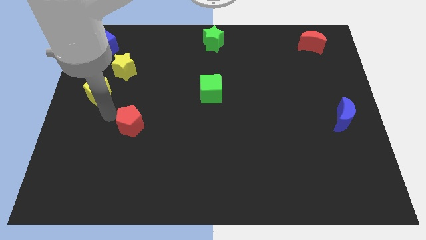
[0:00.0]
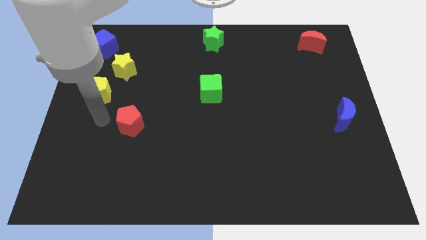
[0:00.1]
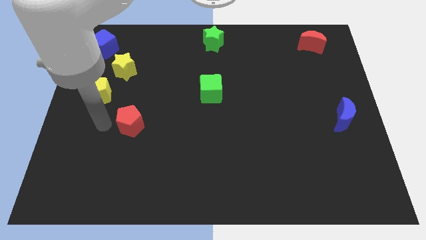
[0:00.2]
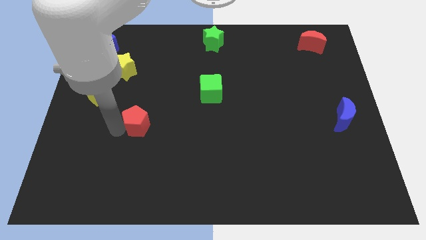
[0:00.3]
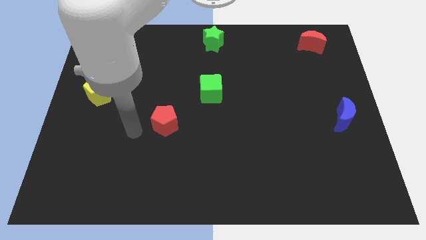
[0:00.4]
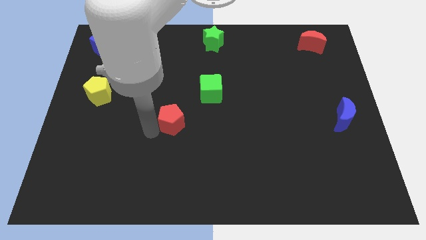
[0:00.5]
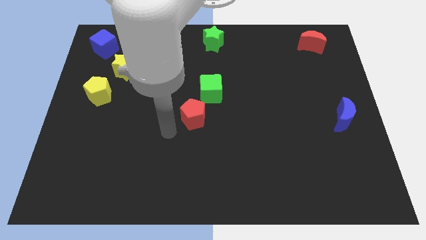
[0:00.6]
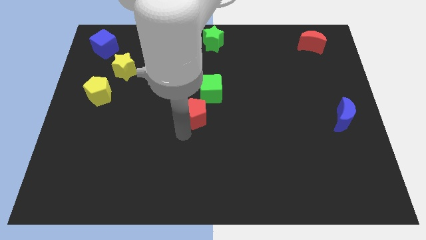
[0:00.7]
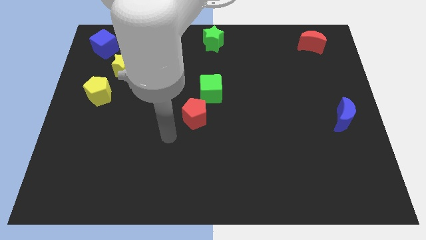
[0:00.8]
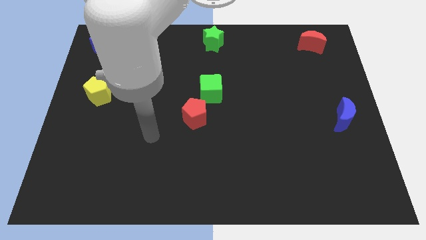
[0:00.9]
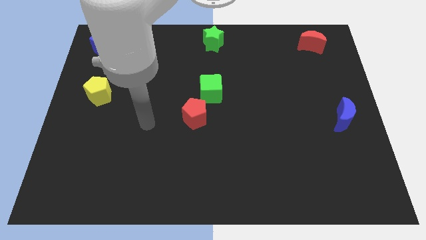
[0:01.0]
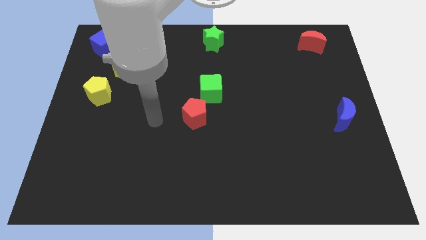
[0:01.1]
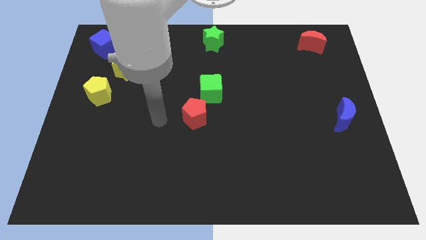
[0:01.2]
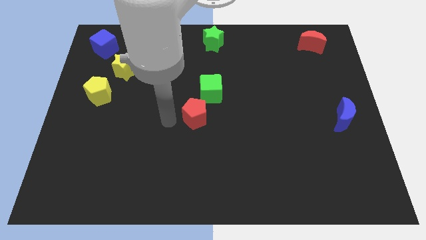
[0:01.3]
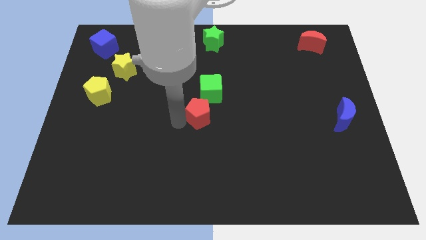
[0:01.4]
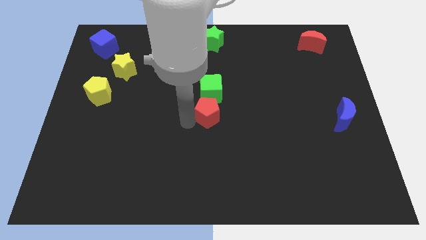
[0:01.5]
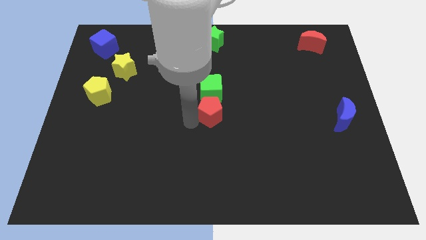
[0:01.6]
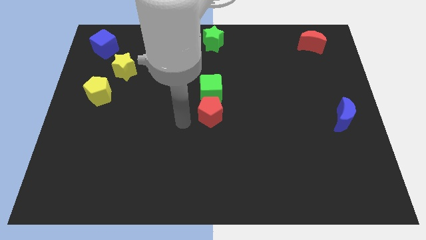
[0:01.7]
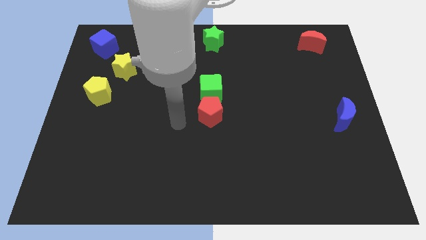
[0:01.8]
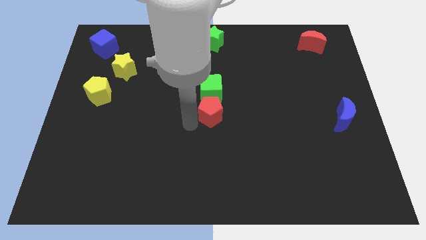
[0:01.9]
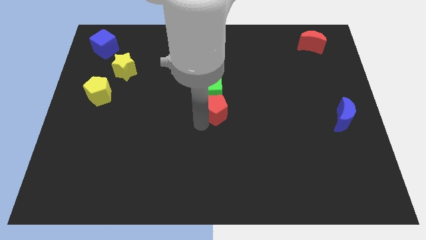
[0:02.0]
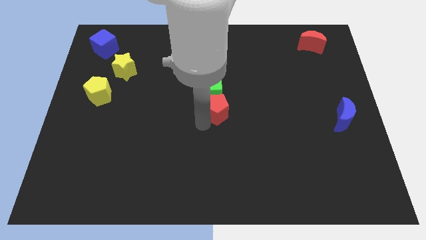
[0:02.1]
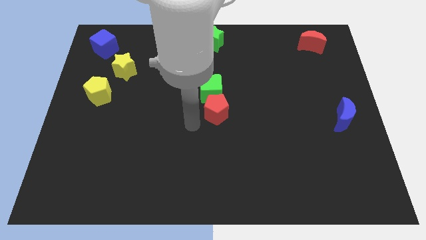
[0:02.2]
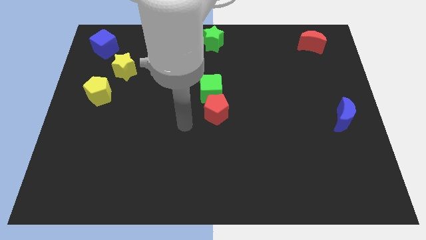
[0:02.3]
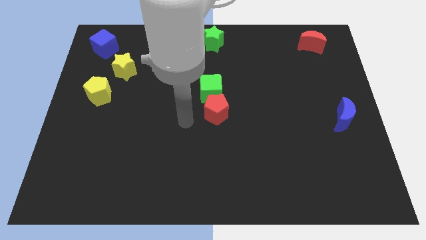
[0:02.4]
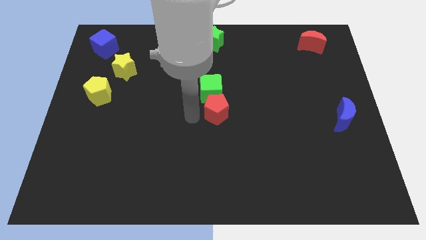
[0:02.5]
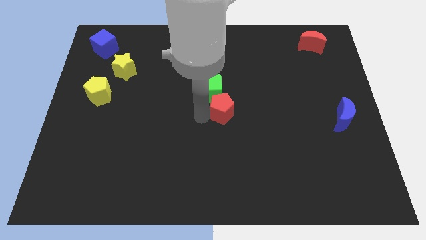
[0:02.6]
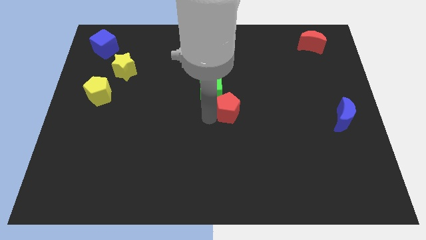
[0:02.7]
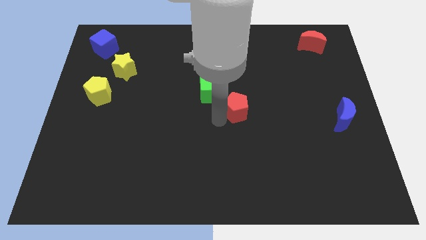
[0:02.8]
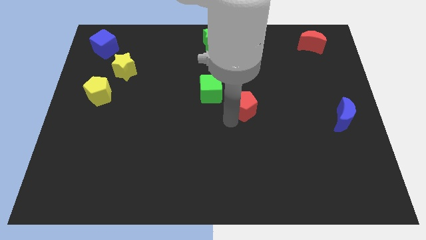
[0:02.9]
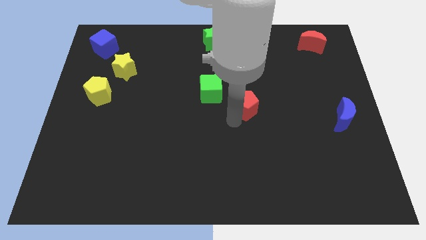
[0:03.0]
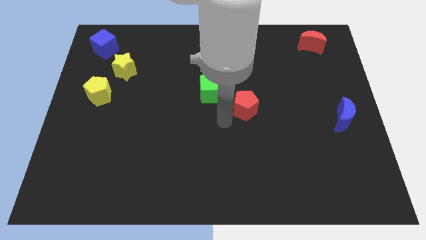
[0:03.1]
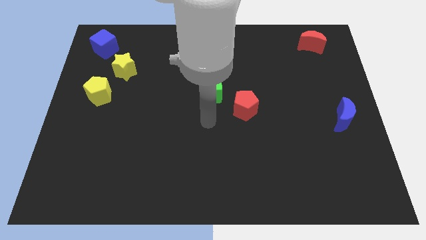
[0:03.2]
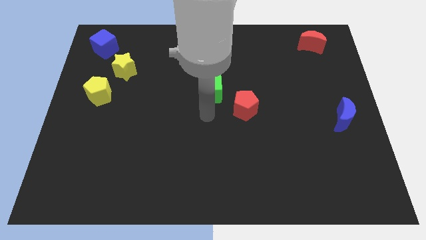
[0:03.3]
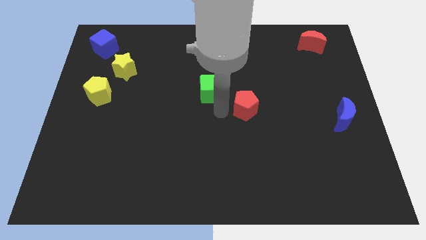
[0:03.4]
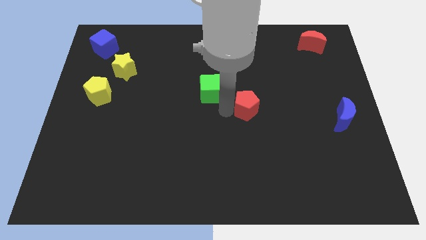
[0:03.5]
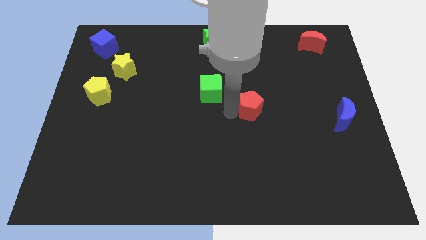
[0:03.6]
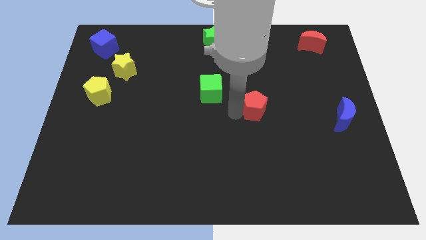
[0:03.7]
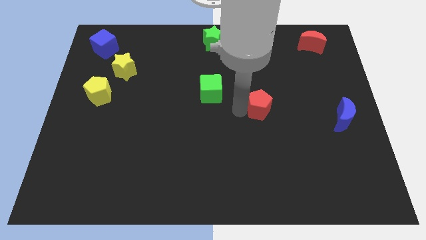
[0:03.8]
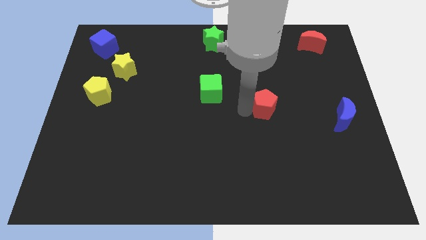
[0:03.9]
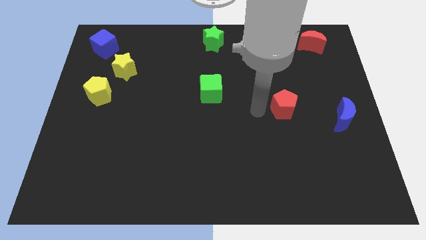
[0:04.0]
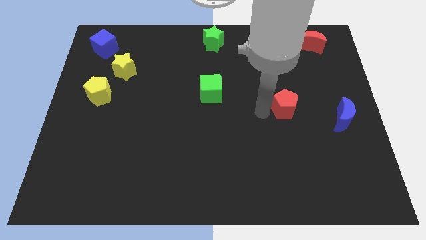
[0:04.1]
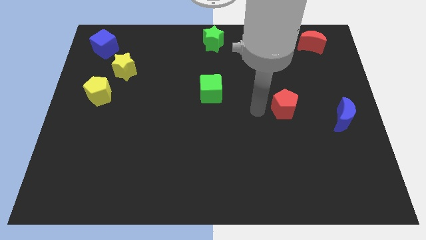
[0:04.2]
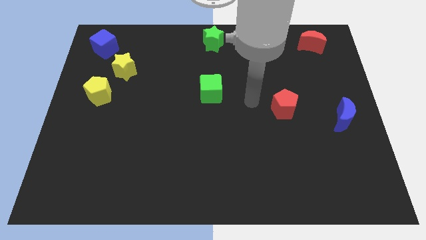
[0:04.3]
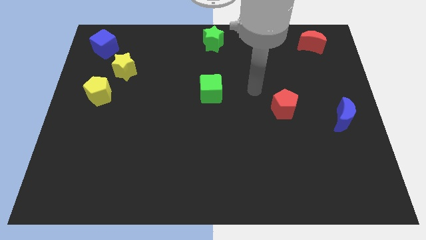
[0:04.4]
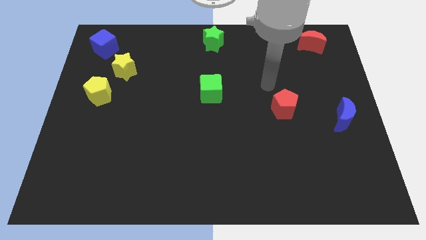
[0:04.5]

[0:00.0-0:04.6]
drag red pentagon towards middle right side of the board

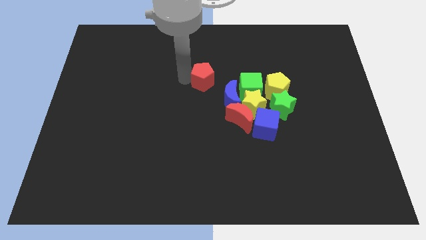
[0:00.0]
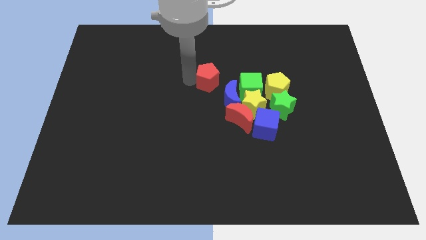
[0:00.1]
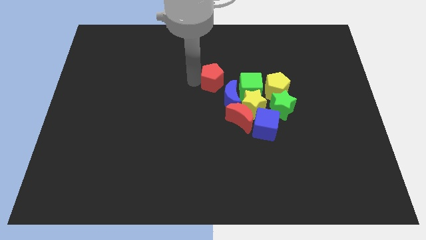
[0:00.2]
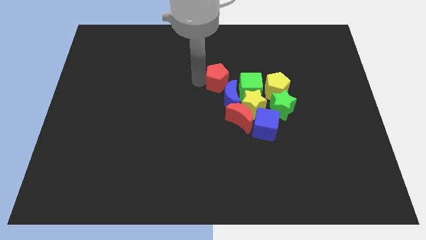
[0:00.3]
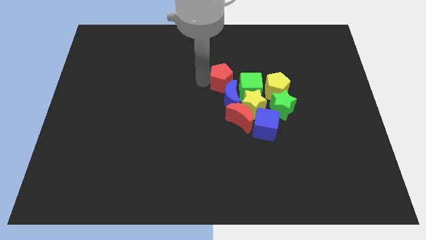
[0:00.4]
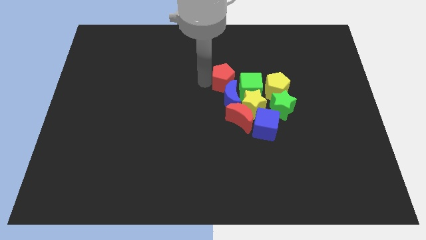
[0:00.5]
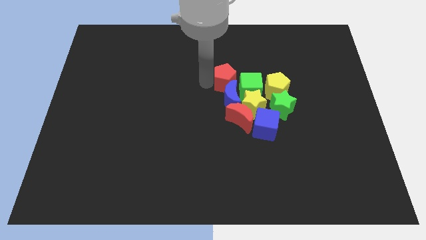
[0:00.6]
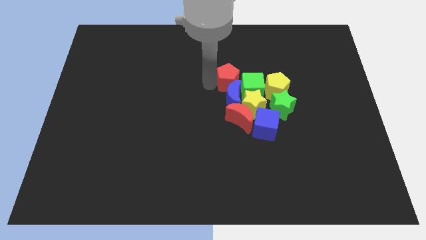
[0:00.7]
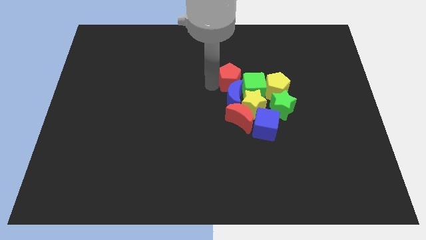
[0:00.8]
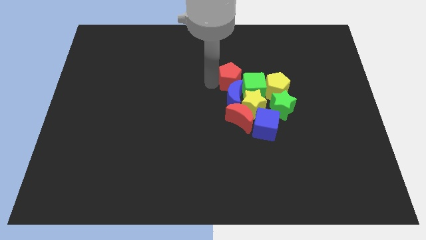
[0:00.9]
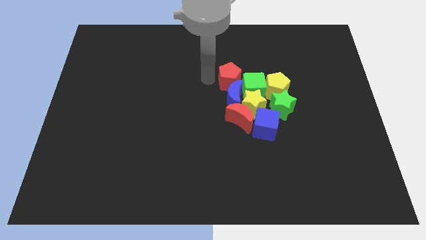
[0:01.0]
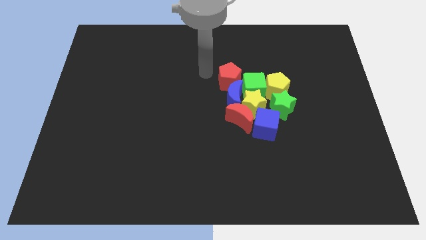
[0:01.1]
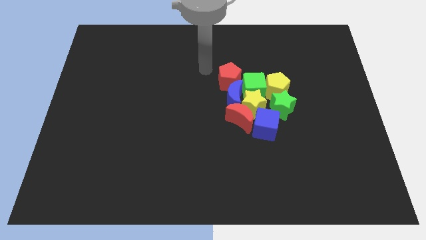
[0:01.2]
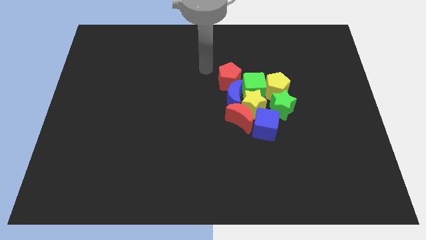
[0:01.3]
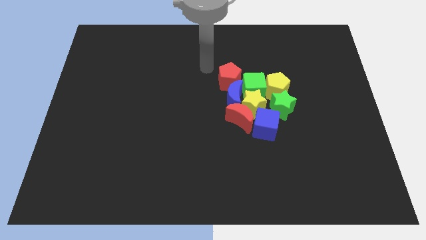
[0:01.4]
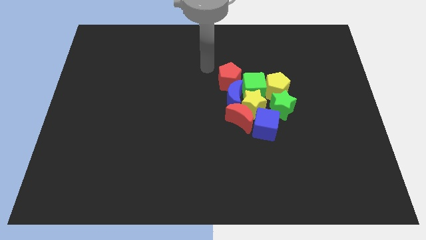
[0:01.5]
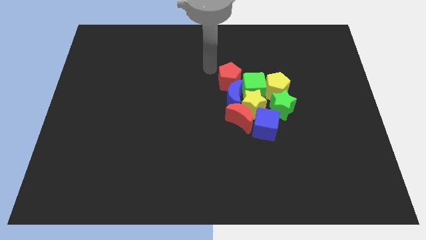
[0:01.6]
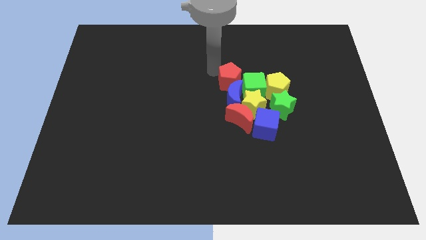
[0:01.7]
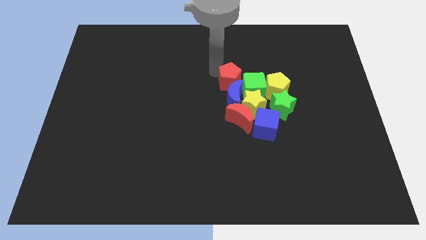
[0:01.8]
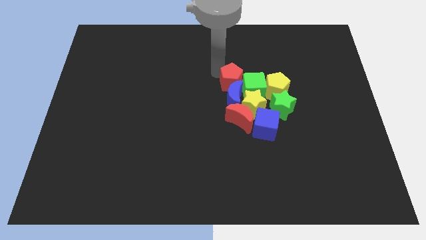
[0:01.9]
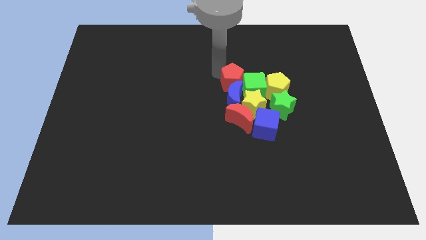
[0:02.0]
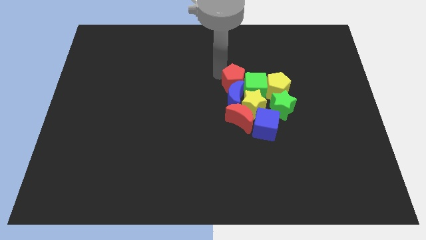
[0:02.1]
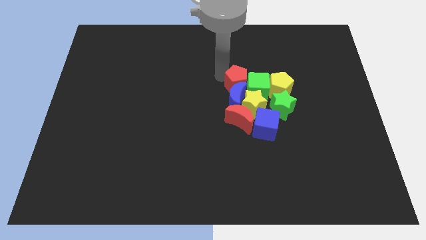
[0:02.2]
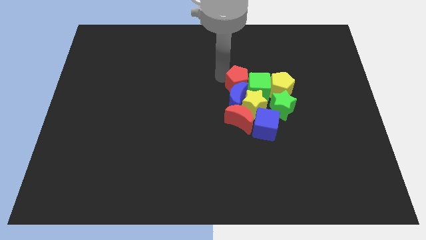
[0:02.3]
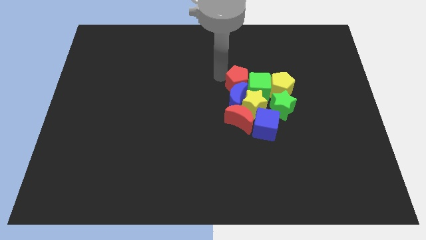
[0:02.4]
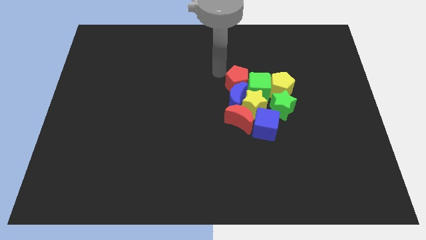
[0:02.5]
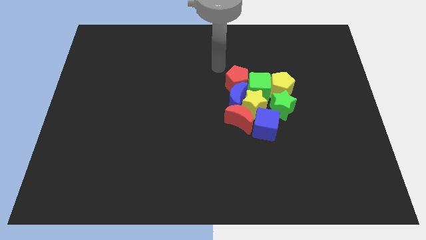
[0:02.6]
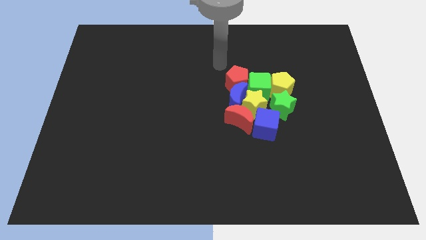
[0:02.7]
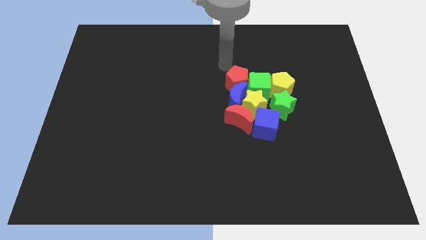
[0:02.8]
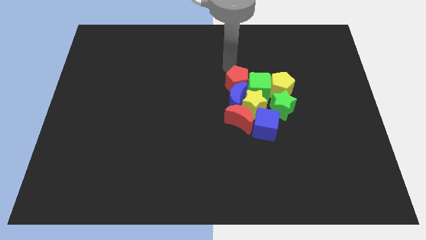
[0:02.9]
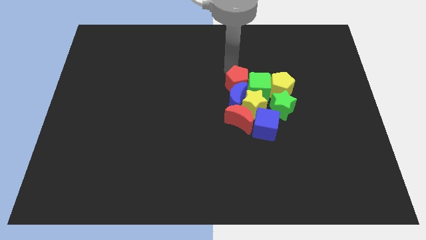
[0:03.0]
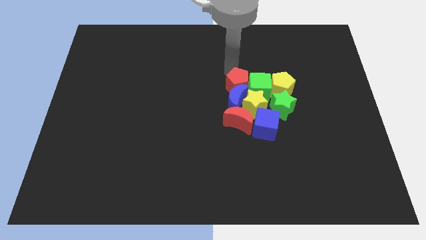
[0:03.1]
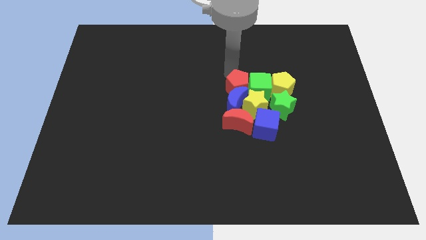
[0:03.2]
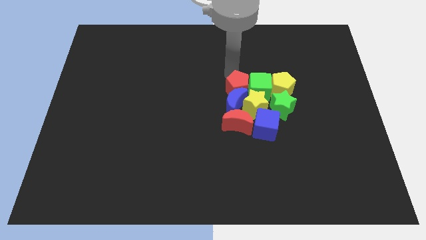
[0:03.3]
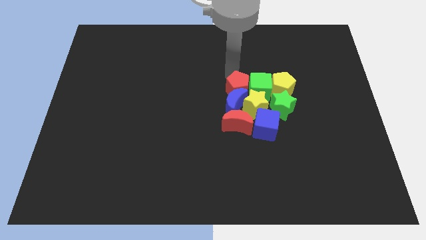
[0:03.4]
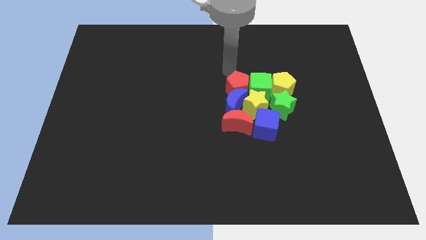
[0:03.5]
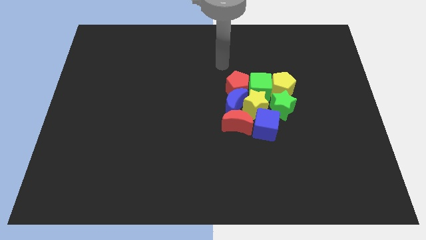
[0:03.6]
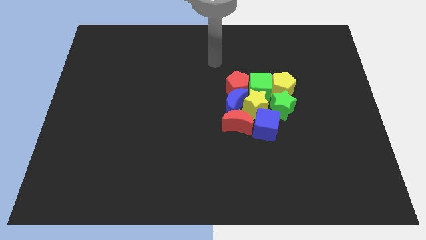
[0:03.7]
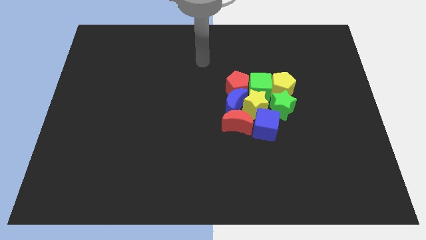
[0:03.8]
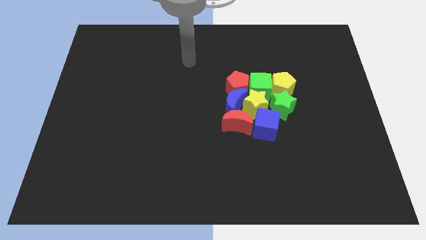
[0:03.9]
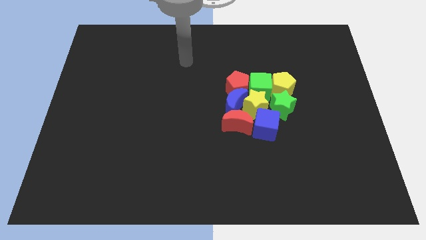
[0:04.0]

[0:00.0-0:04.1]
place the red pentagon left side of the green cube

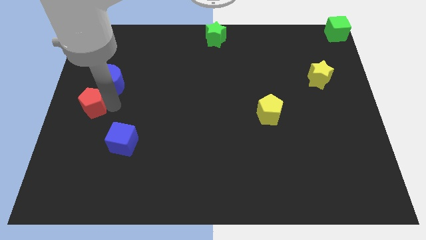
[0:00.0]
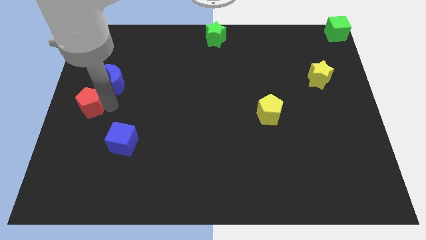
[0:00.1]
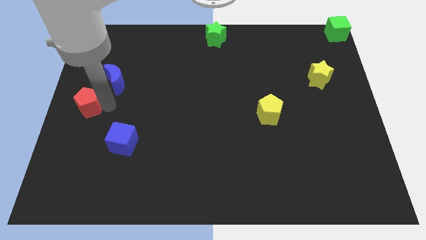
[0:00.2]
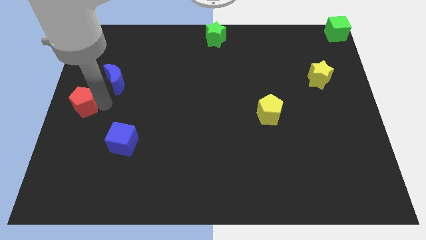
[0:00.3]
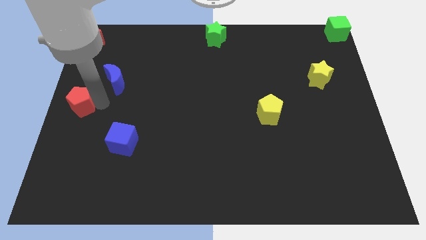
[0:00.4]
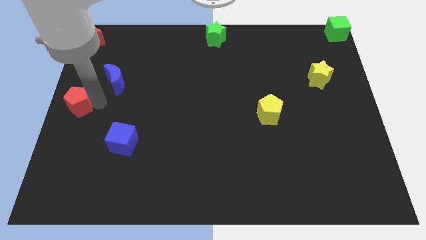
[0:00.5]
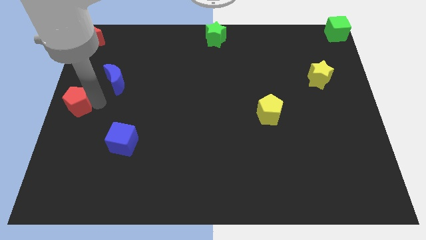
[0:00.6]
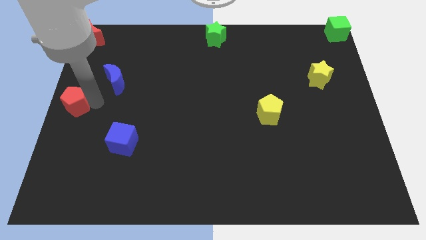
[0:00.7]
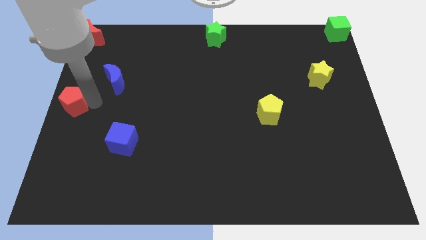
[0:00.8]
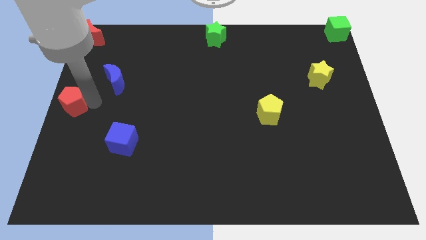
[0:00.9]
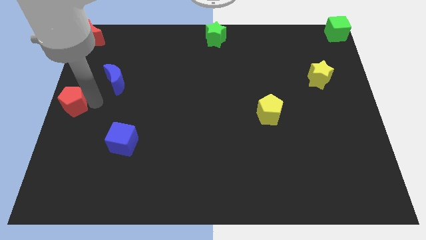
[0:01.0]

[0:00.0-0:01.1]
move the red pentagon slightly to the left
